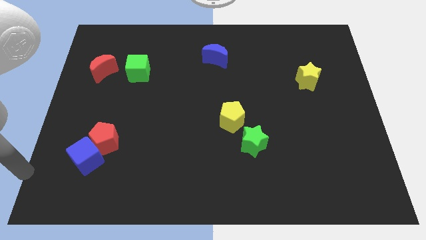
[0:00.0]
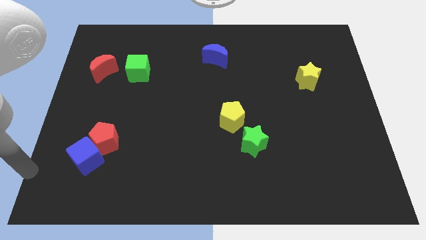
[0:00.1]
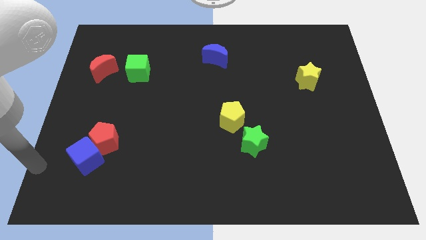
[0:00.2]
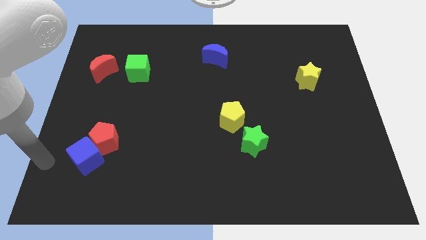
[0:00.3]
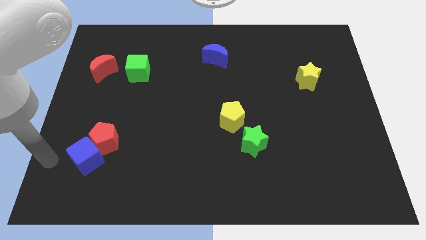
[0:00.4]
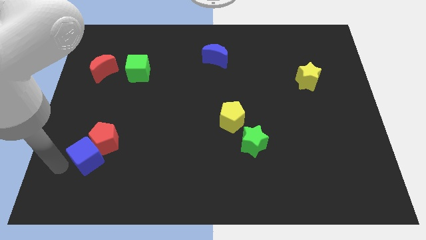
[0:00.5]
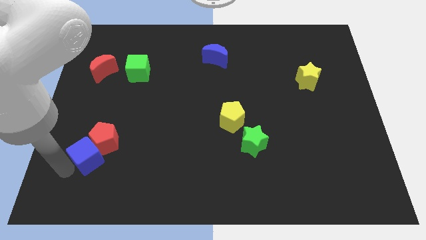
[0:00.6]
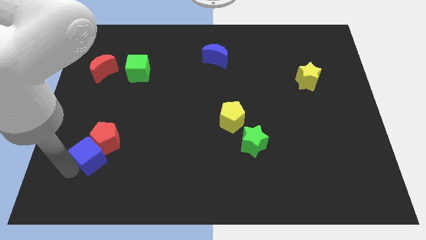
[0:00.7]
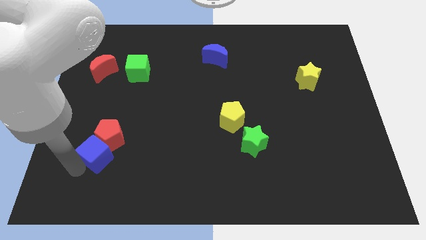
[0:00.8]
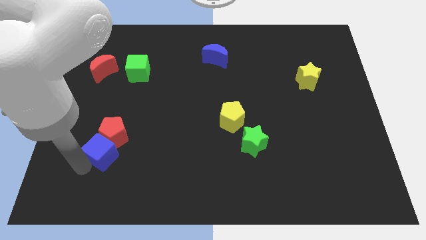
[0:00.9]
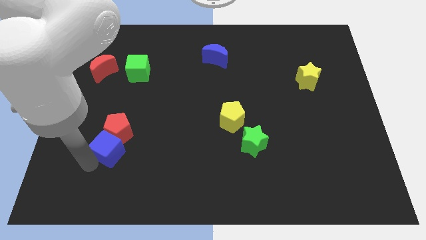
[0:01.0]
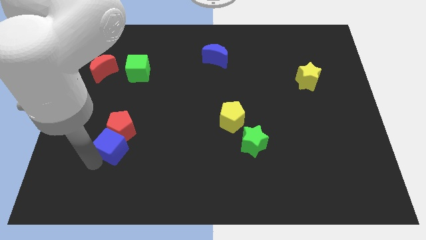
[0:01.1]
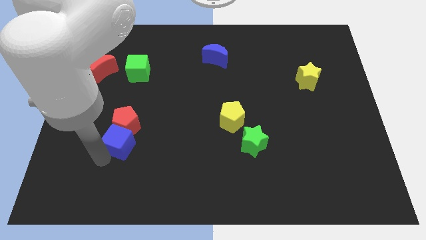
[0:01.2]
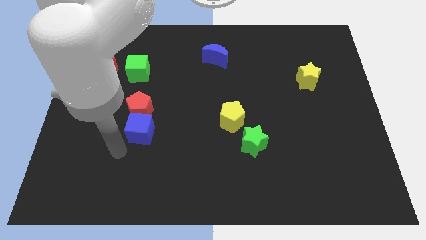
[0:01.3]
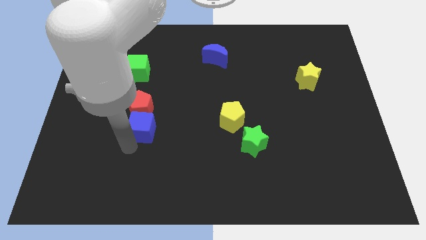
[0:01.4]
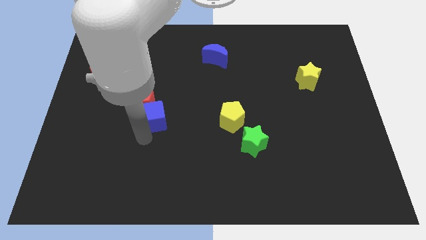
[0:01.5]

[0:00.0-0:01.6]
push the blue cube and red pentagon to the center

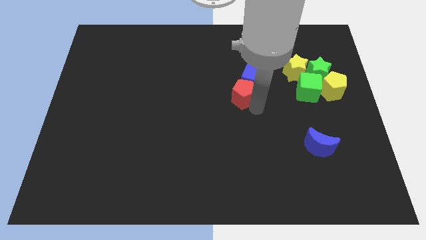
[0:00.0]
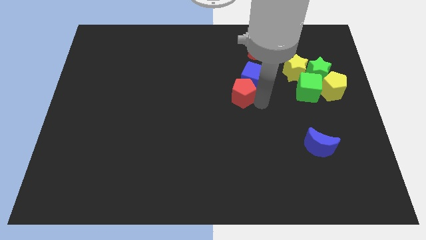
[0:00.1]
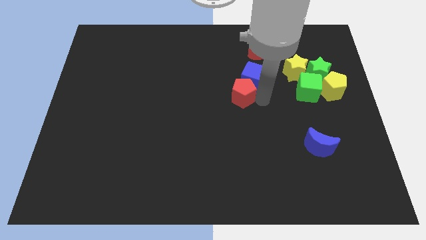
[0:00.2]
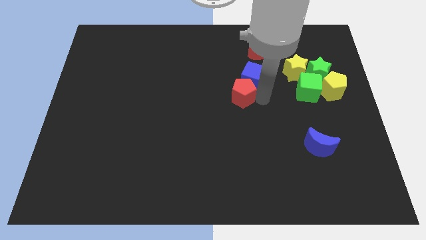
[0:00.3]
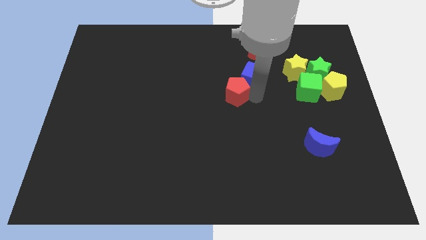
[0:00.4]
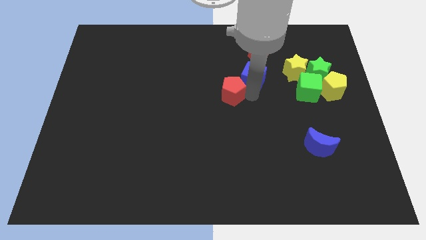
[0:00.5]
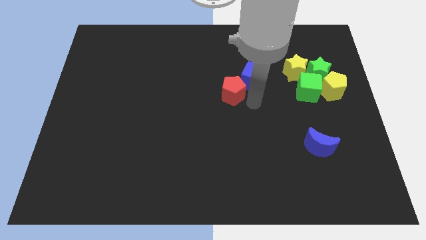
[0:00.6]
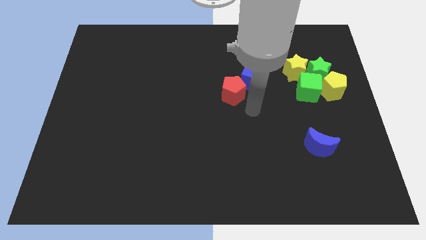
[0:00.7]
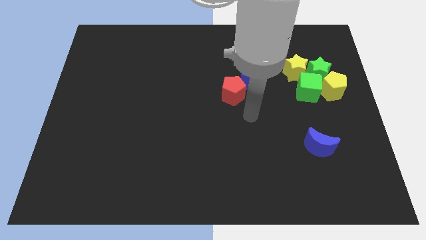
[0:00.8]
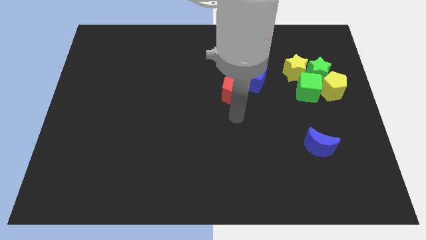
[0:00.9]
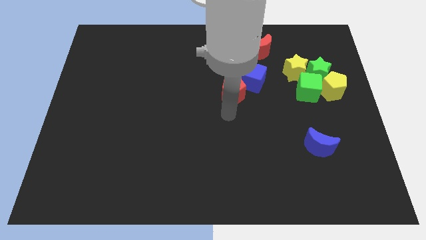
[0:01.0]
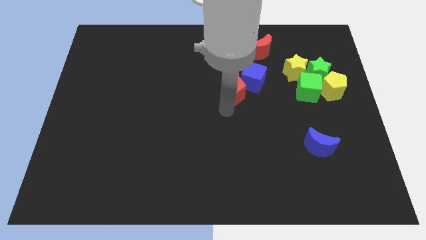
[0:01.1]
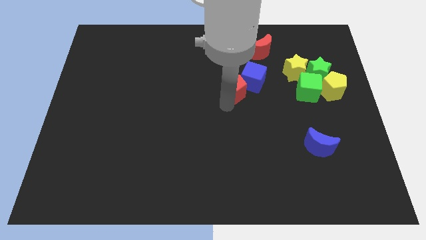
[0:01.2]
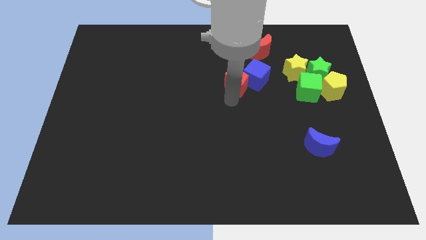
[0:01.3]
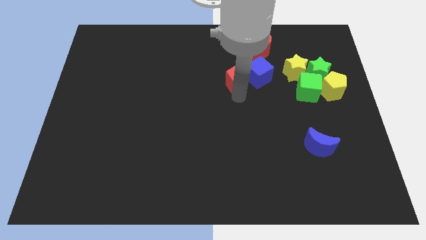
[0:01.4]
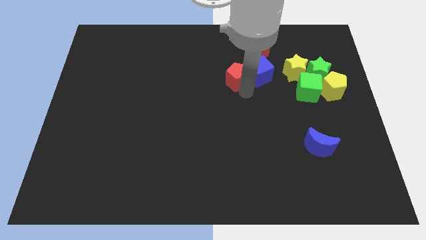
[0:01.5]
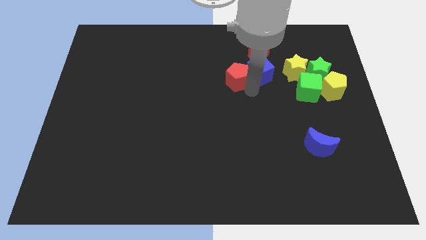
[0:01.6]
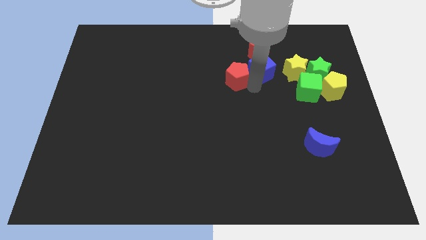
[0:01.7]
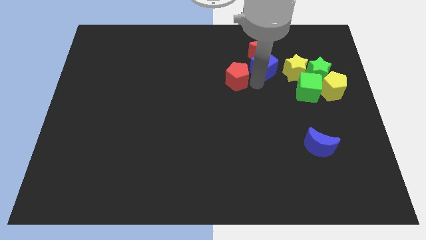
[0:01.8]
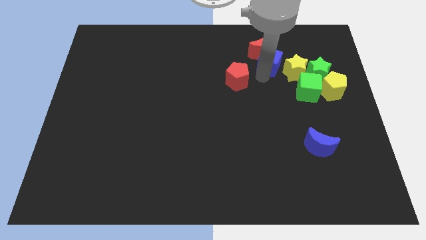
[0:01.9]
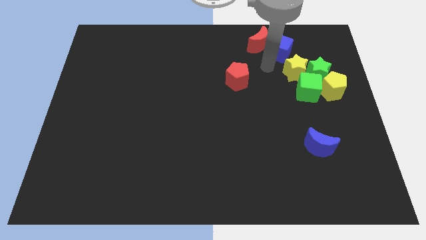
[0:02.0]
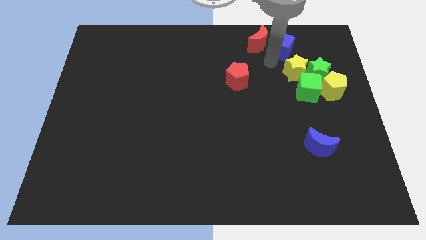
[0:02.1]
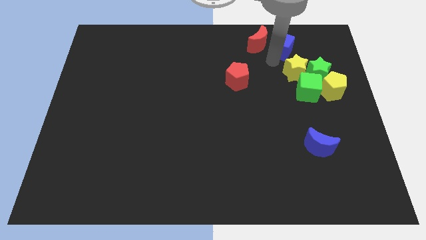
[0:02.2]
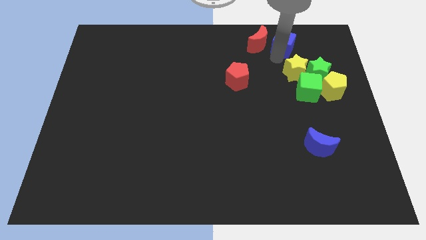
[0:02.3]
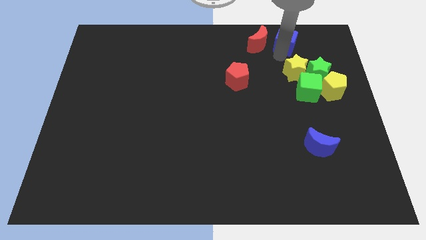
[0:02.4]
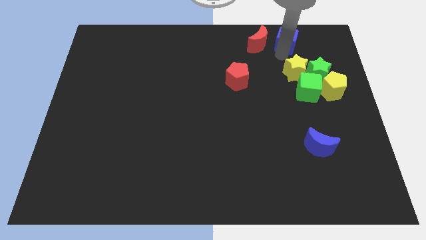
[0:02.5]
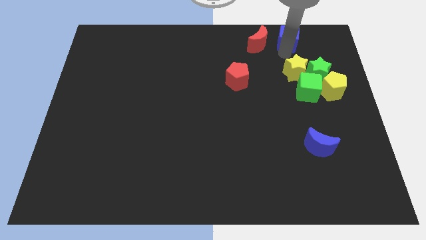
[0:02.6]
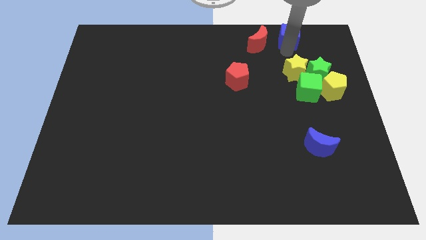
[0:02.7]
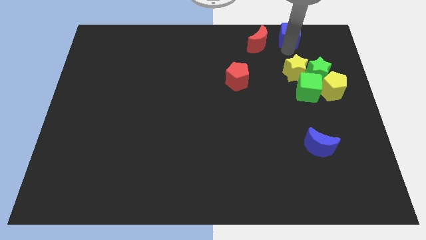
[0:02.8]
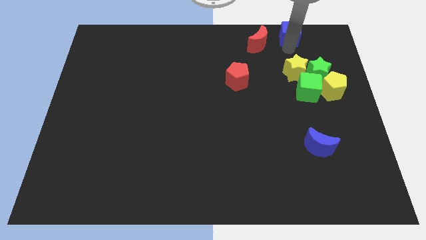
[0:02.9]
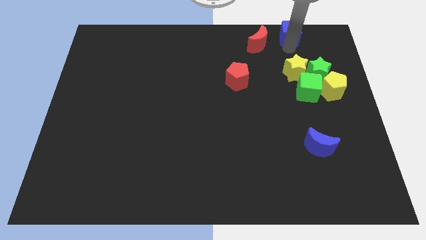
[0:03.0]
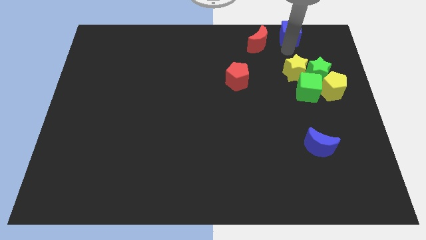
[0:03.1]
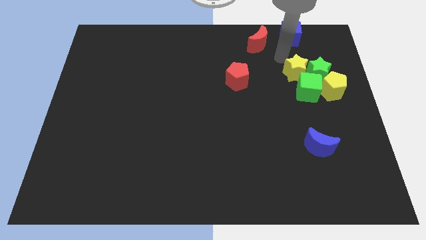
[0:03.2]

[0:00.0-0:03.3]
move blue cube on the top right corner of the board

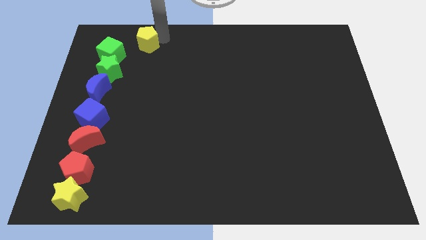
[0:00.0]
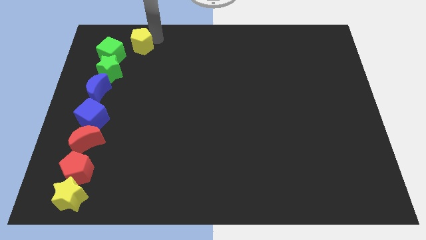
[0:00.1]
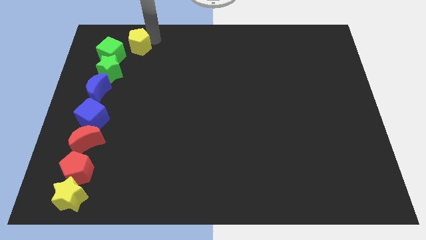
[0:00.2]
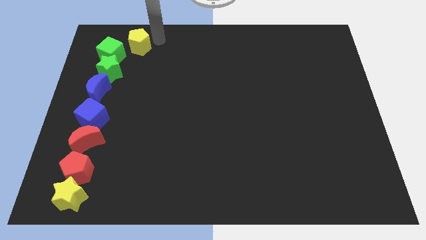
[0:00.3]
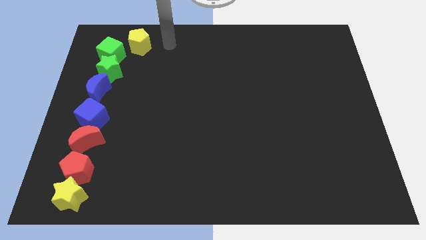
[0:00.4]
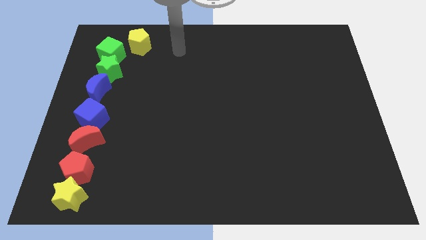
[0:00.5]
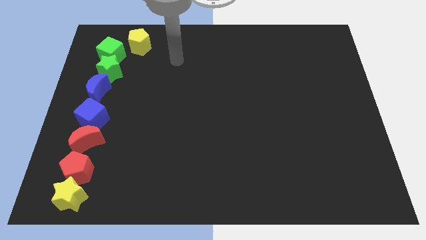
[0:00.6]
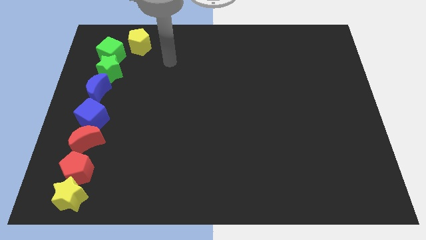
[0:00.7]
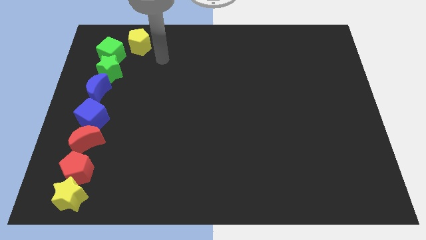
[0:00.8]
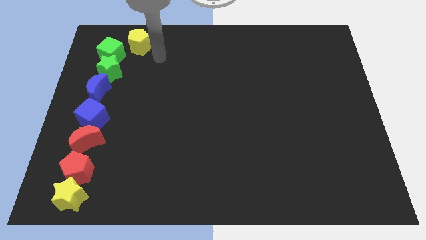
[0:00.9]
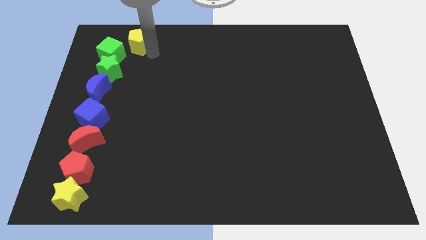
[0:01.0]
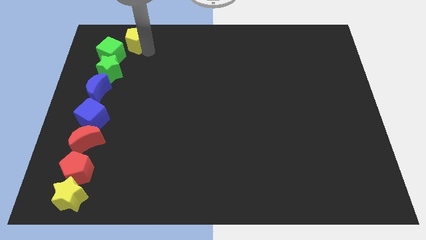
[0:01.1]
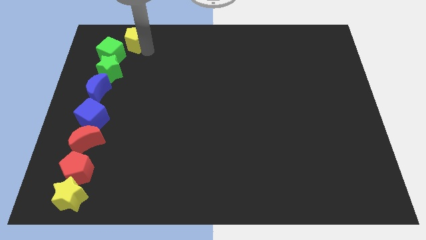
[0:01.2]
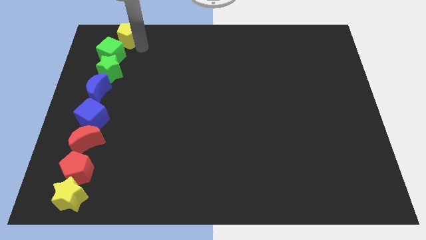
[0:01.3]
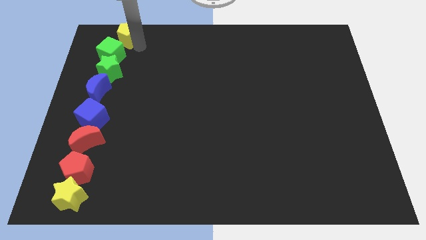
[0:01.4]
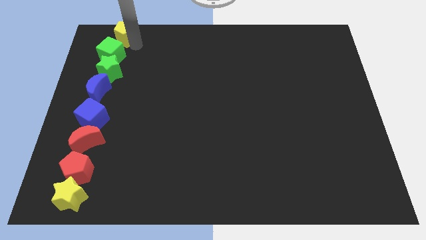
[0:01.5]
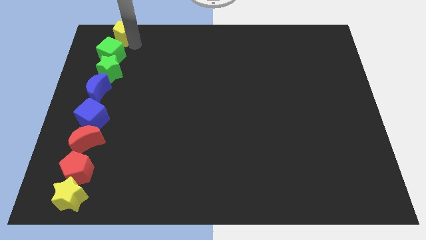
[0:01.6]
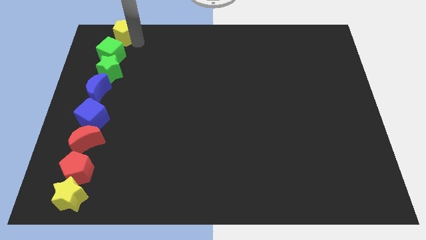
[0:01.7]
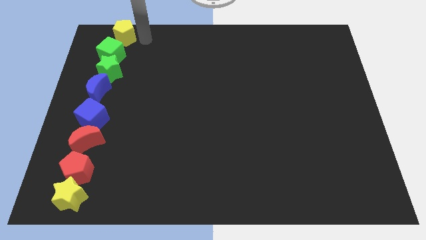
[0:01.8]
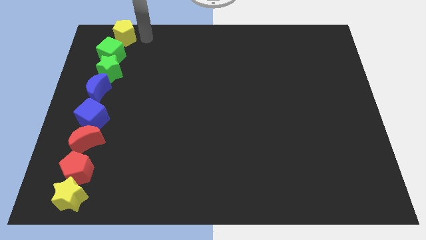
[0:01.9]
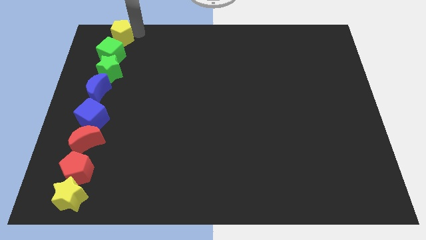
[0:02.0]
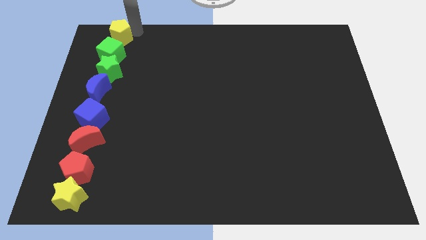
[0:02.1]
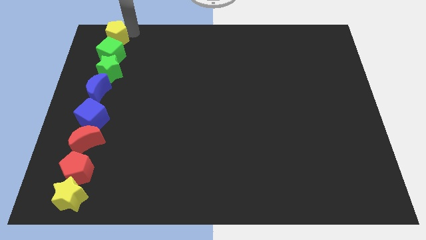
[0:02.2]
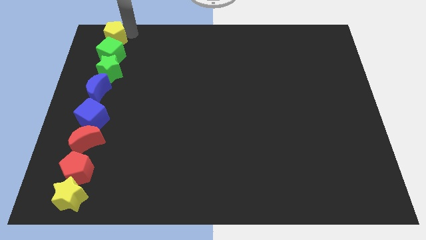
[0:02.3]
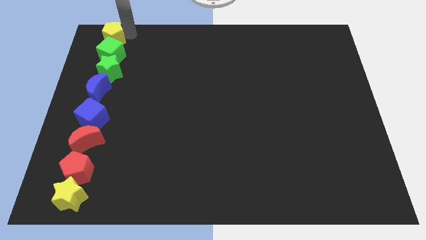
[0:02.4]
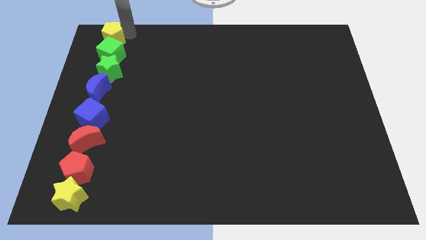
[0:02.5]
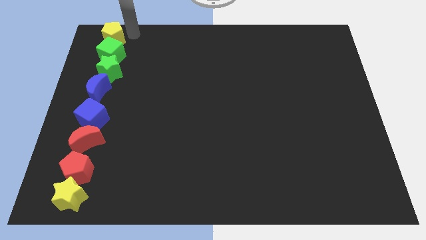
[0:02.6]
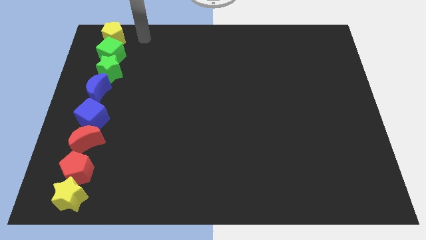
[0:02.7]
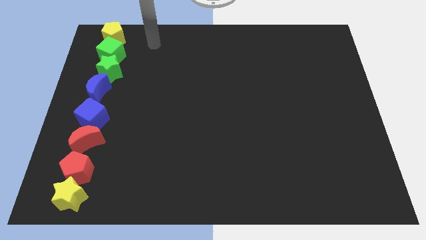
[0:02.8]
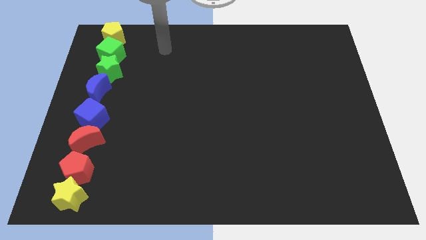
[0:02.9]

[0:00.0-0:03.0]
place yellow pentagon at the top in vertical line of other blocks

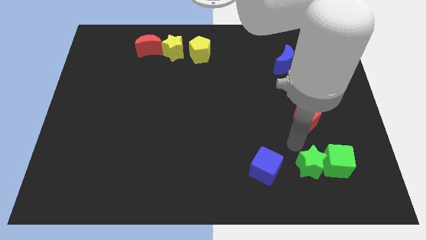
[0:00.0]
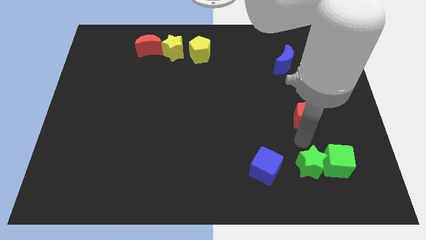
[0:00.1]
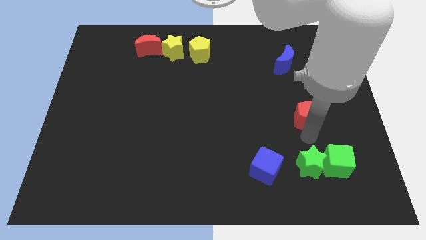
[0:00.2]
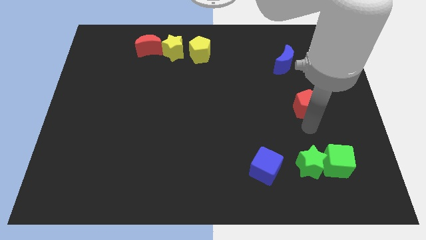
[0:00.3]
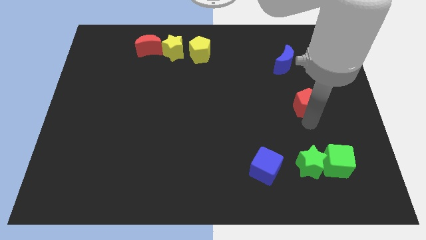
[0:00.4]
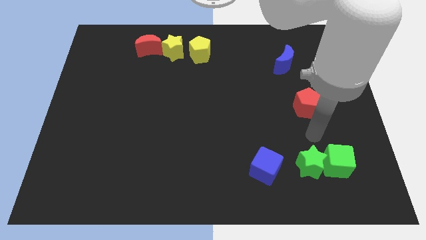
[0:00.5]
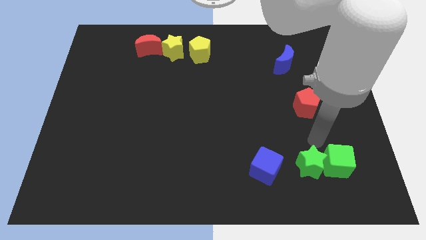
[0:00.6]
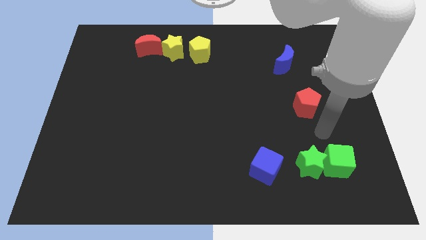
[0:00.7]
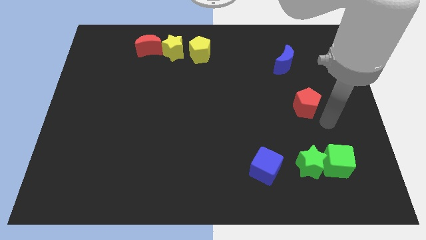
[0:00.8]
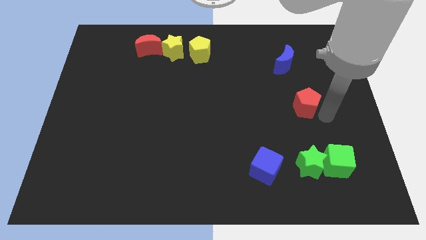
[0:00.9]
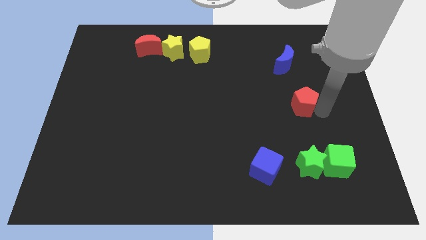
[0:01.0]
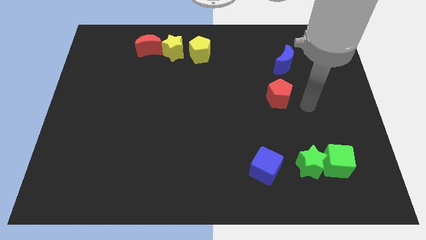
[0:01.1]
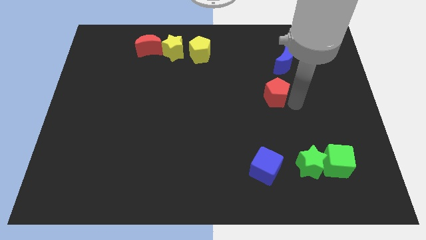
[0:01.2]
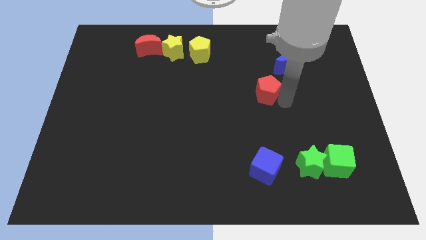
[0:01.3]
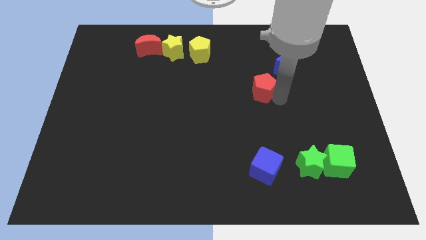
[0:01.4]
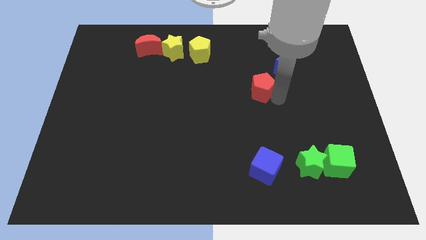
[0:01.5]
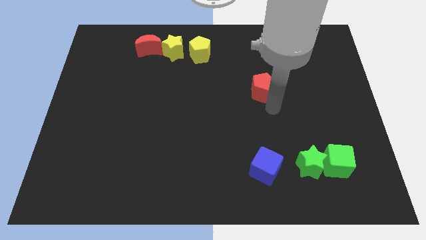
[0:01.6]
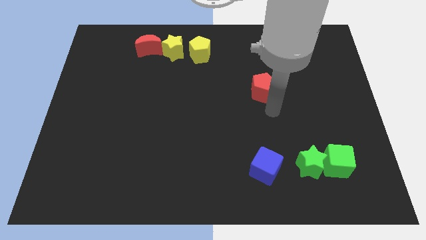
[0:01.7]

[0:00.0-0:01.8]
move the red pentagon to the bottom left of the blue crescent
